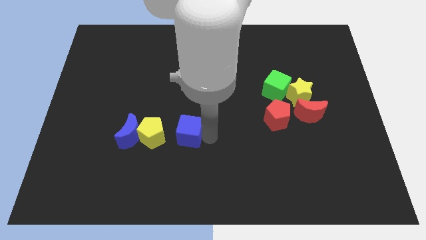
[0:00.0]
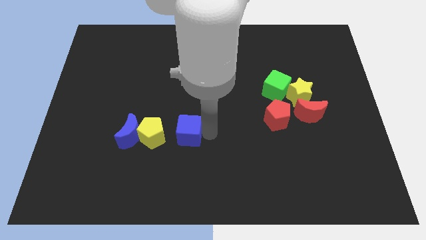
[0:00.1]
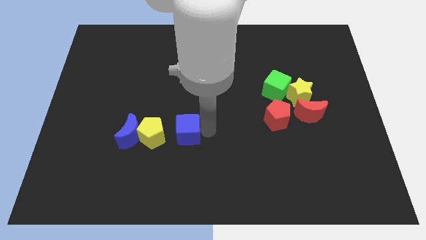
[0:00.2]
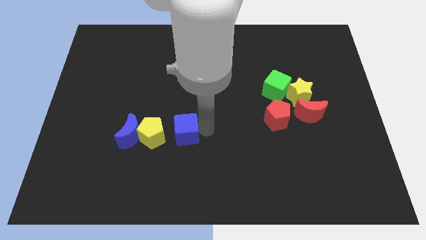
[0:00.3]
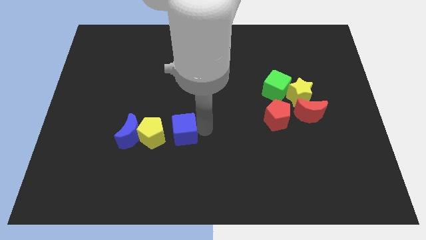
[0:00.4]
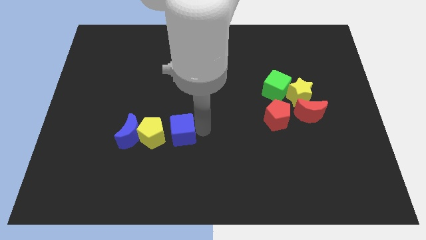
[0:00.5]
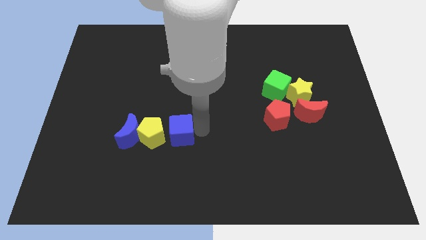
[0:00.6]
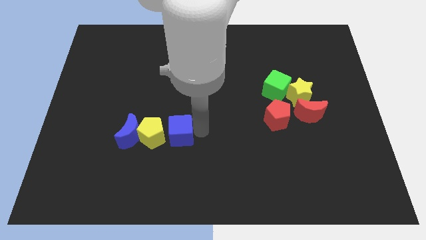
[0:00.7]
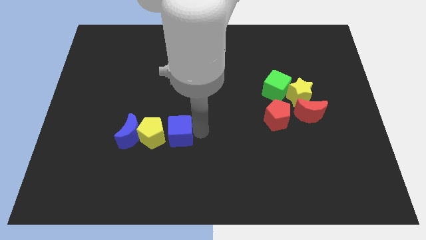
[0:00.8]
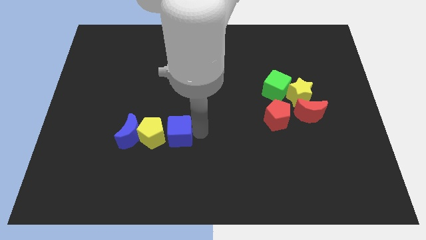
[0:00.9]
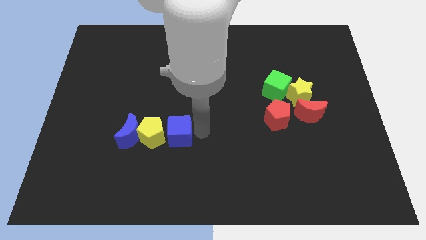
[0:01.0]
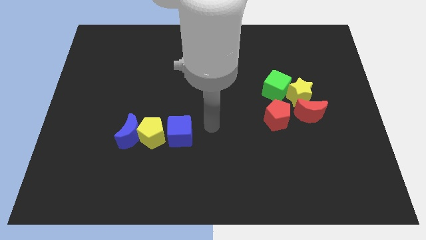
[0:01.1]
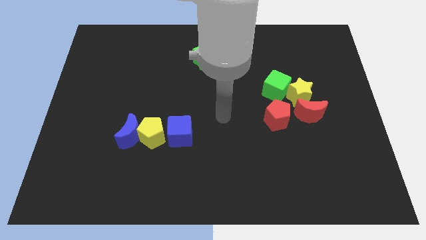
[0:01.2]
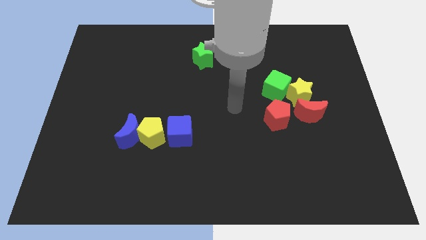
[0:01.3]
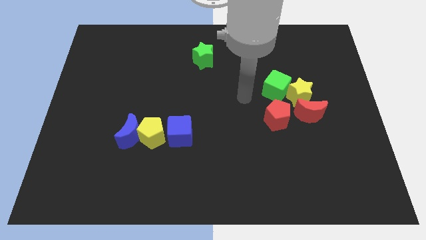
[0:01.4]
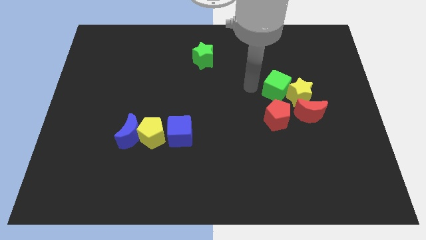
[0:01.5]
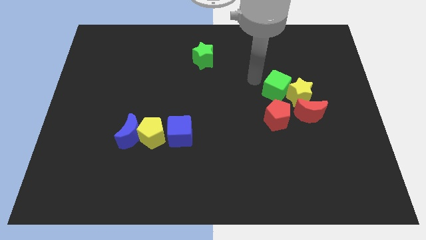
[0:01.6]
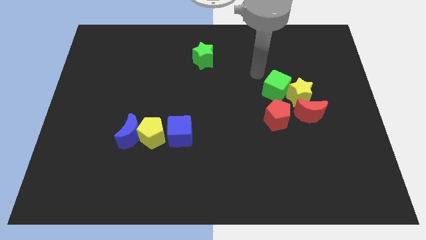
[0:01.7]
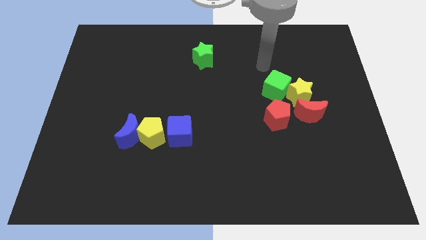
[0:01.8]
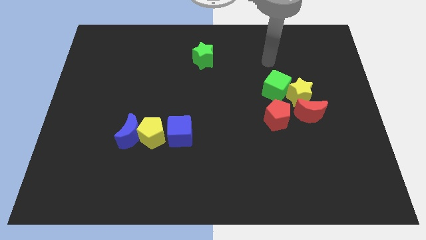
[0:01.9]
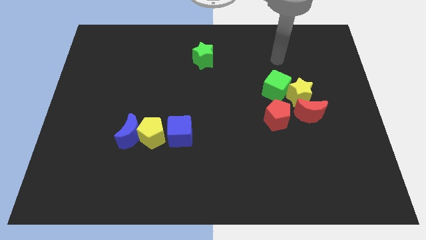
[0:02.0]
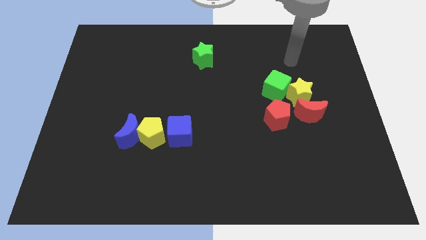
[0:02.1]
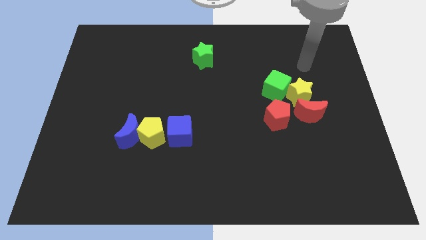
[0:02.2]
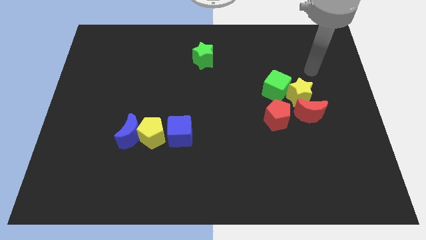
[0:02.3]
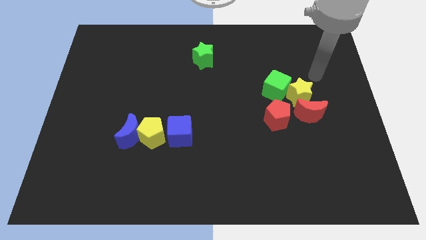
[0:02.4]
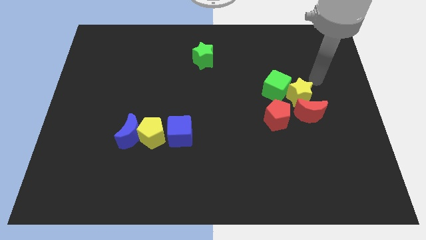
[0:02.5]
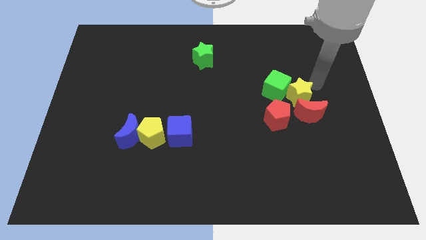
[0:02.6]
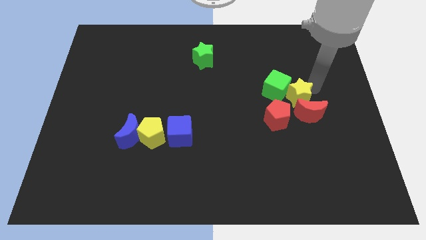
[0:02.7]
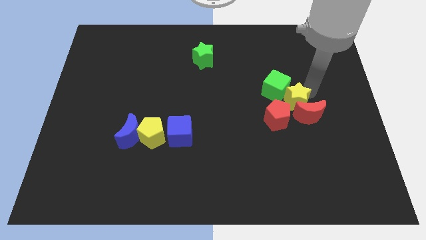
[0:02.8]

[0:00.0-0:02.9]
place your arm at the top right of yellow star

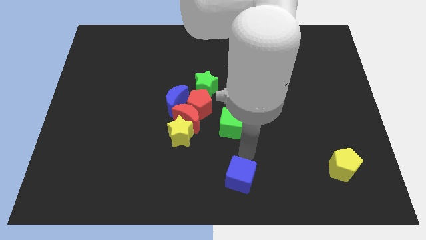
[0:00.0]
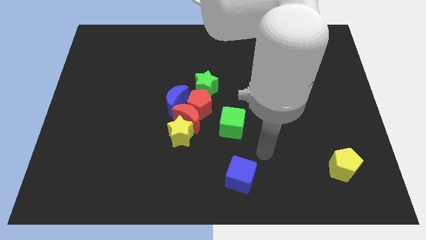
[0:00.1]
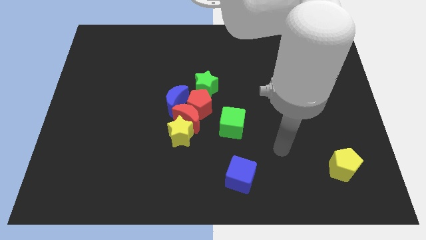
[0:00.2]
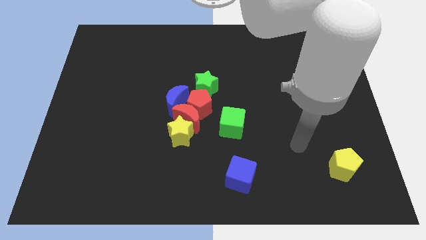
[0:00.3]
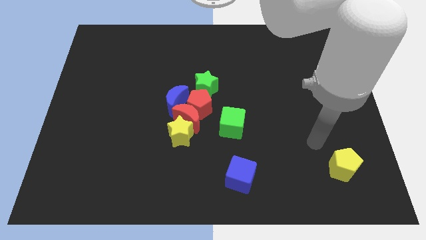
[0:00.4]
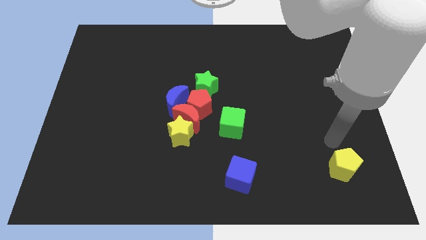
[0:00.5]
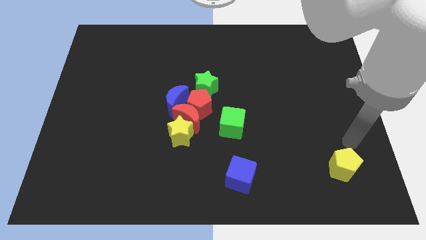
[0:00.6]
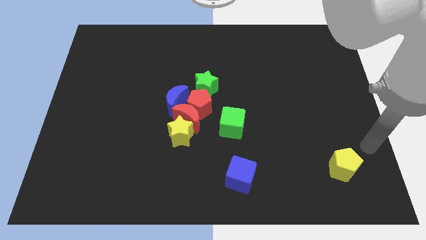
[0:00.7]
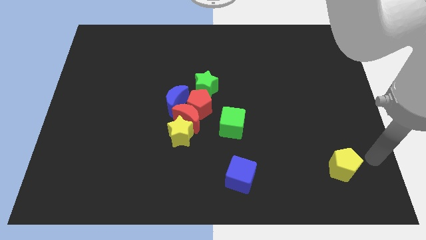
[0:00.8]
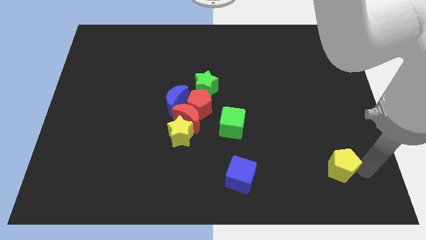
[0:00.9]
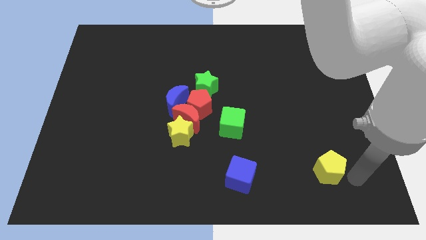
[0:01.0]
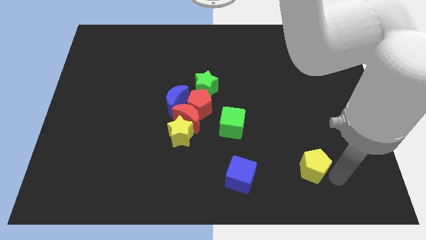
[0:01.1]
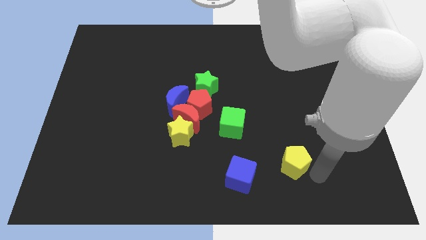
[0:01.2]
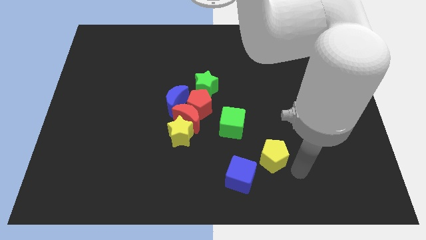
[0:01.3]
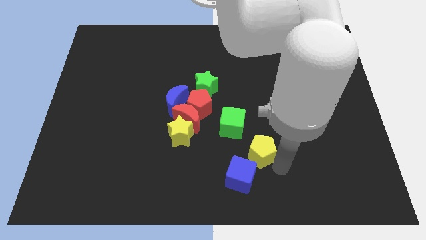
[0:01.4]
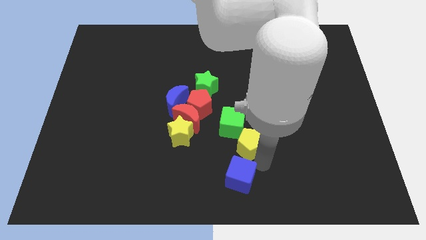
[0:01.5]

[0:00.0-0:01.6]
push the yellow pentagon close to the green cube

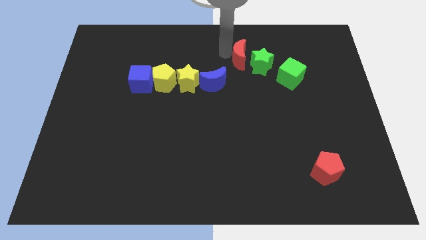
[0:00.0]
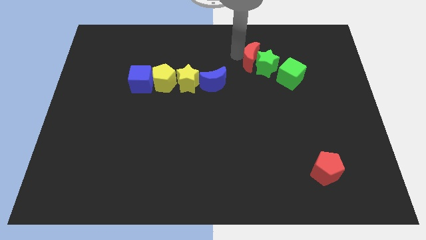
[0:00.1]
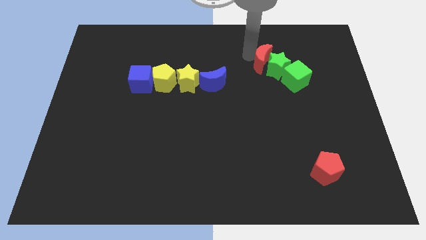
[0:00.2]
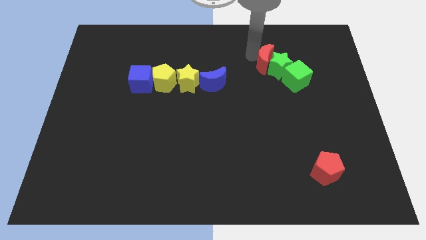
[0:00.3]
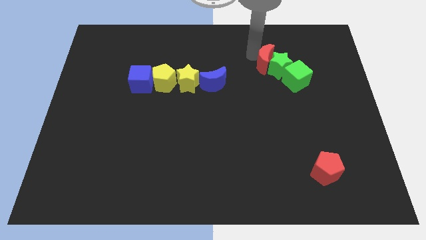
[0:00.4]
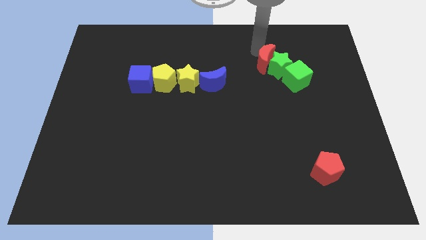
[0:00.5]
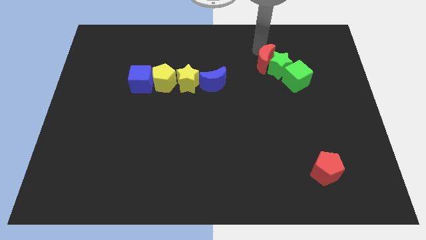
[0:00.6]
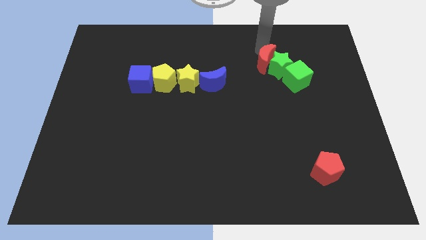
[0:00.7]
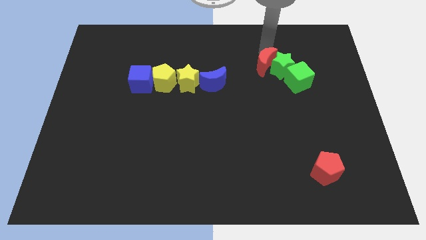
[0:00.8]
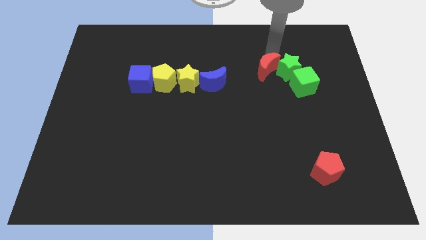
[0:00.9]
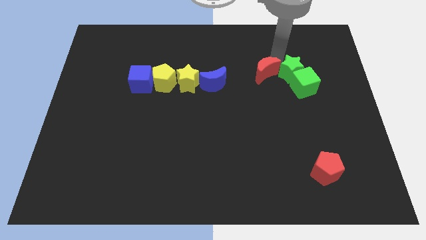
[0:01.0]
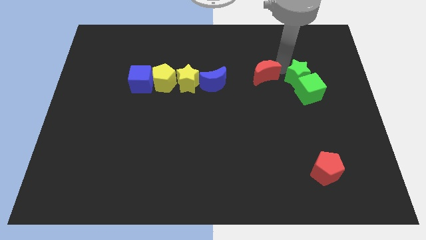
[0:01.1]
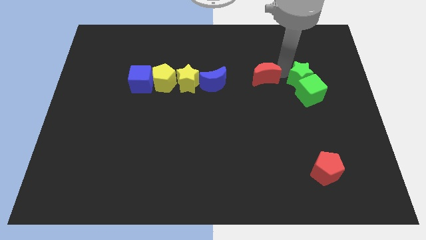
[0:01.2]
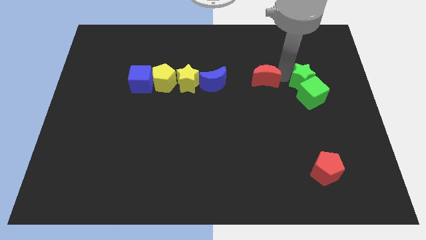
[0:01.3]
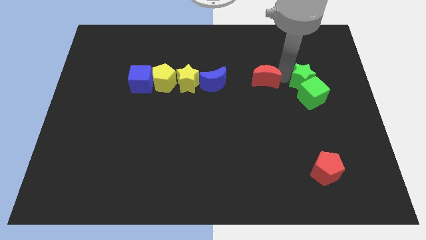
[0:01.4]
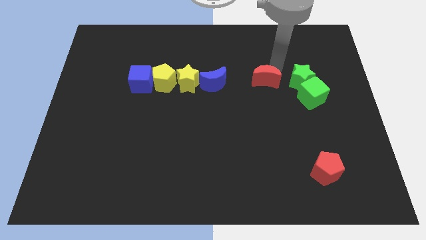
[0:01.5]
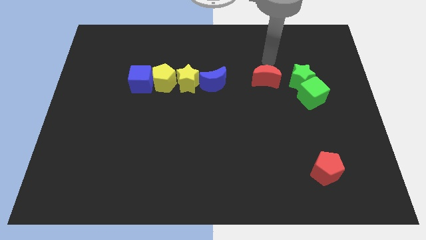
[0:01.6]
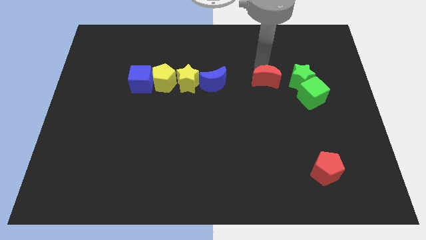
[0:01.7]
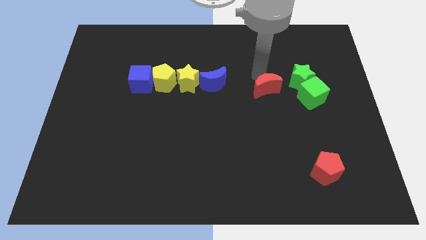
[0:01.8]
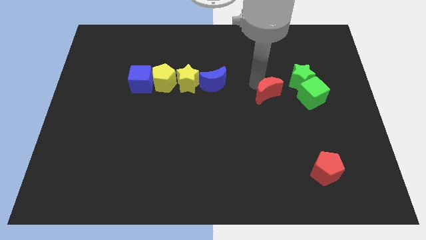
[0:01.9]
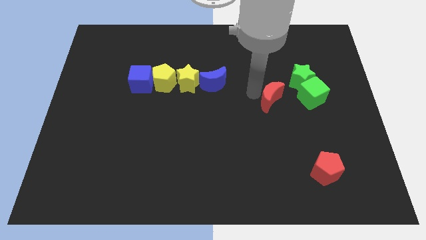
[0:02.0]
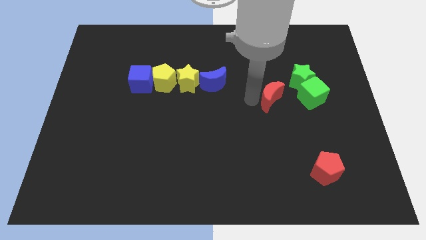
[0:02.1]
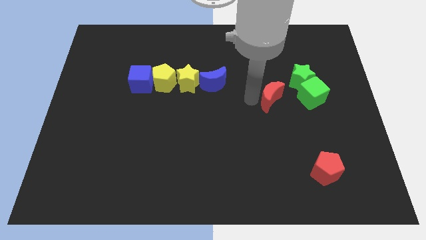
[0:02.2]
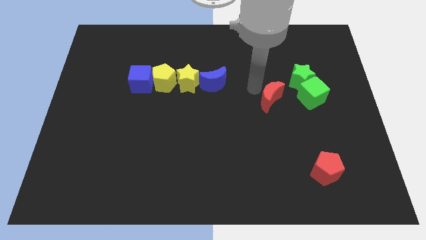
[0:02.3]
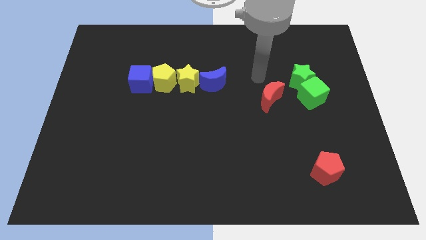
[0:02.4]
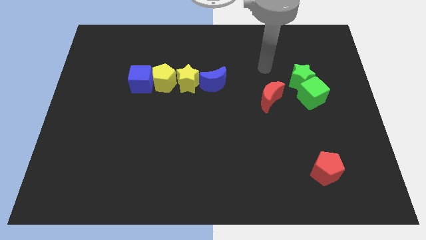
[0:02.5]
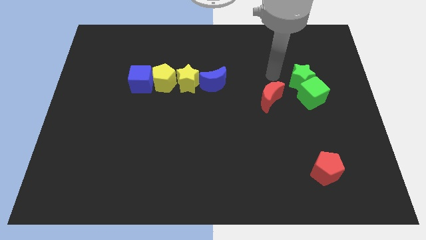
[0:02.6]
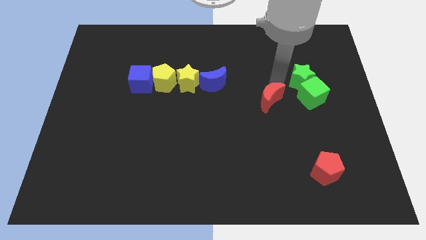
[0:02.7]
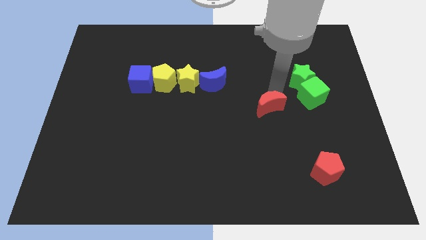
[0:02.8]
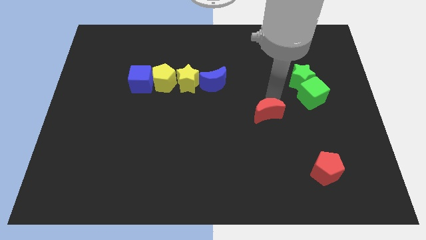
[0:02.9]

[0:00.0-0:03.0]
move red crescent along with green star

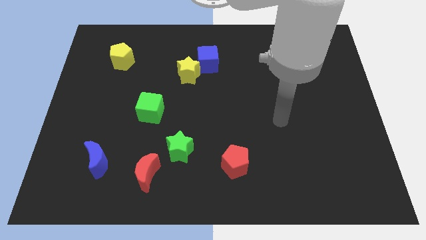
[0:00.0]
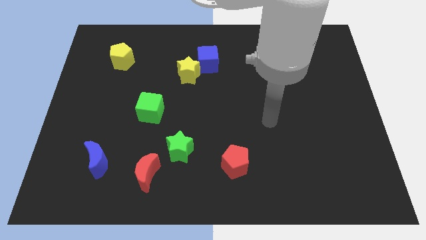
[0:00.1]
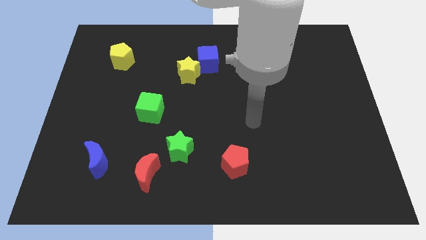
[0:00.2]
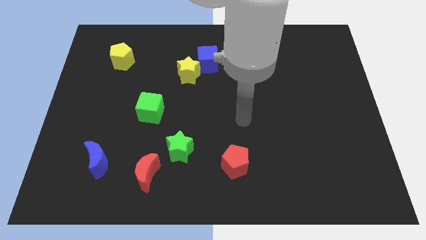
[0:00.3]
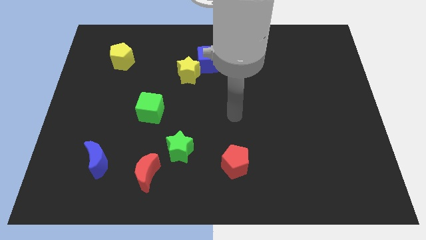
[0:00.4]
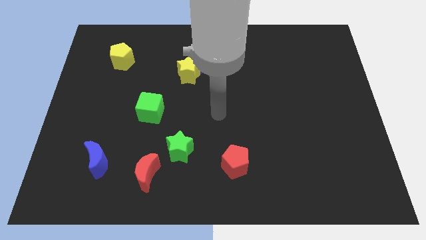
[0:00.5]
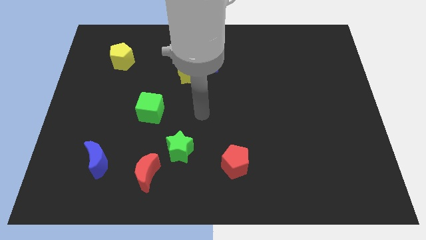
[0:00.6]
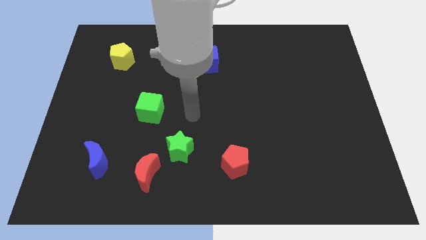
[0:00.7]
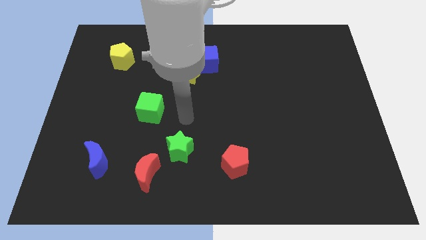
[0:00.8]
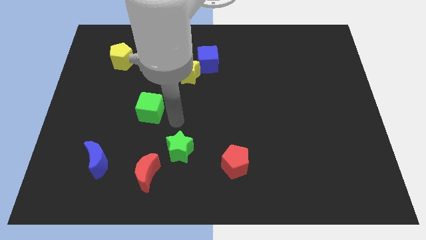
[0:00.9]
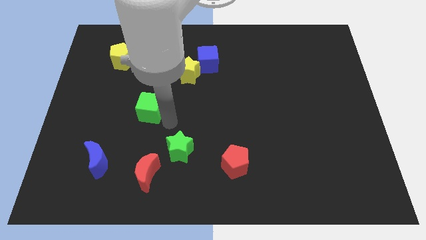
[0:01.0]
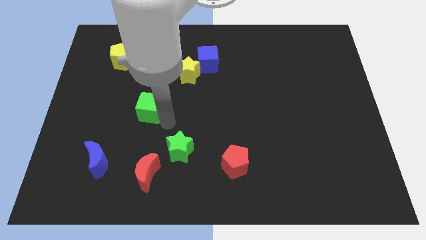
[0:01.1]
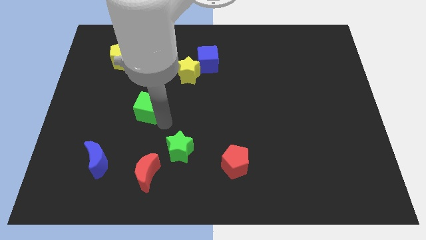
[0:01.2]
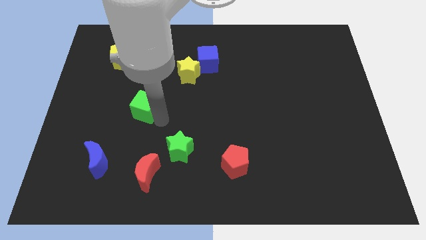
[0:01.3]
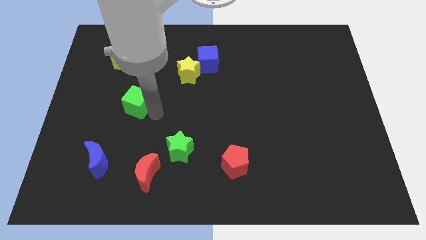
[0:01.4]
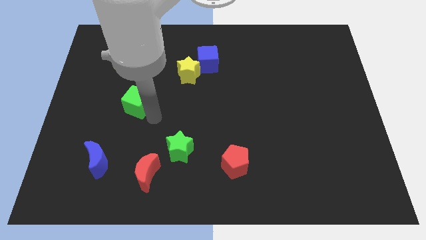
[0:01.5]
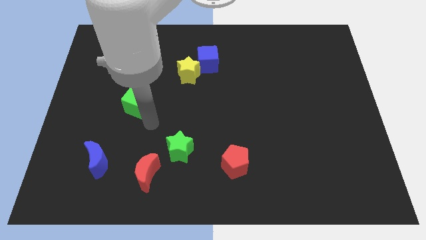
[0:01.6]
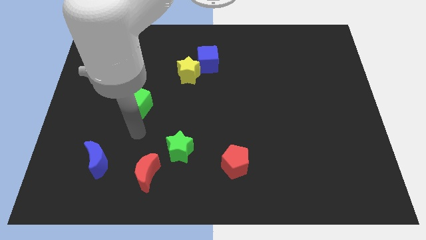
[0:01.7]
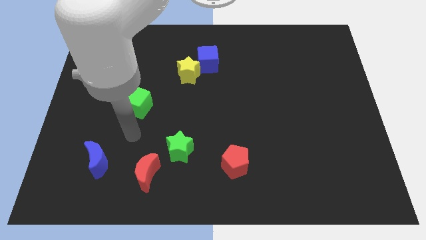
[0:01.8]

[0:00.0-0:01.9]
slightly push the green cube upwards
